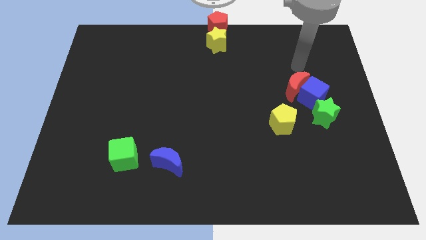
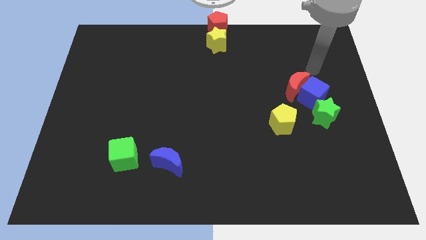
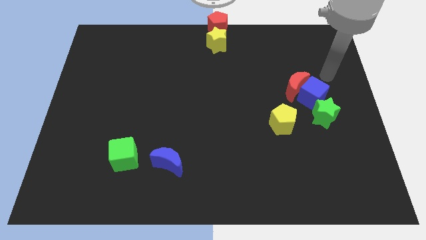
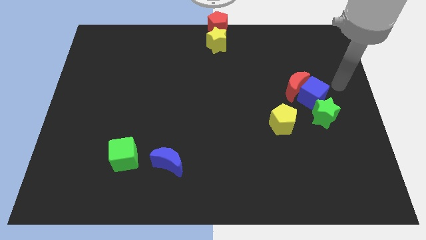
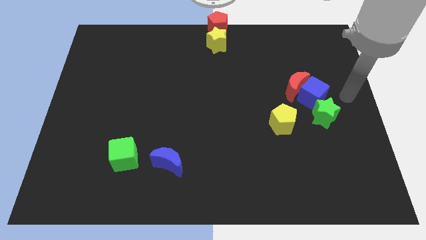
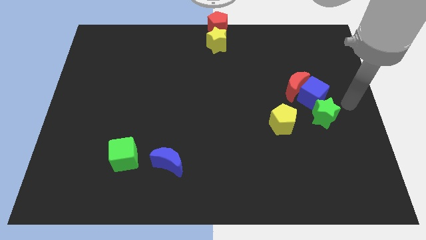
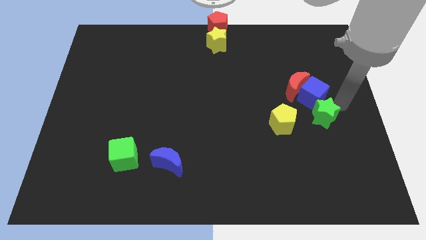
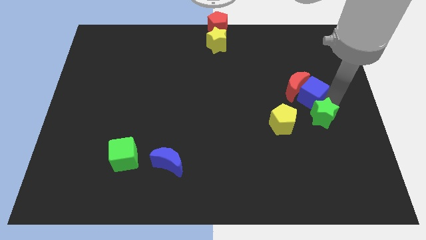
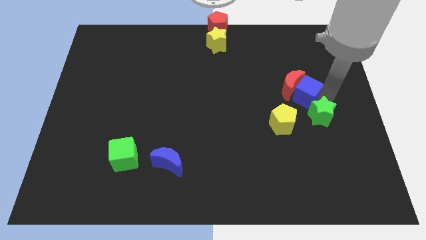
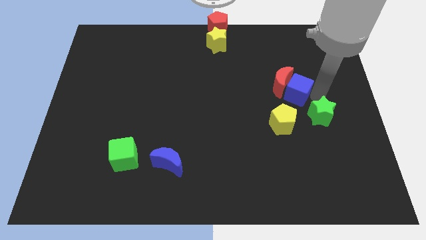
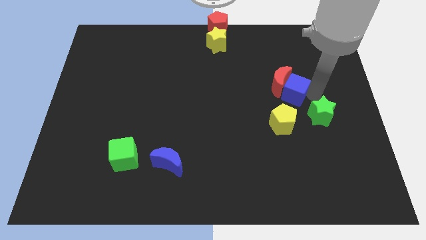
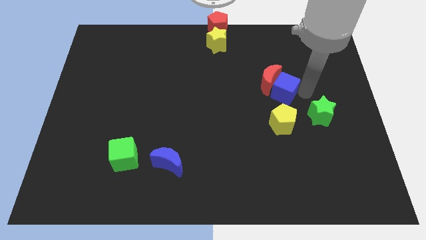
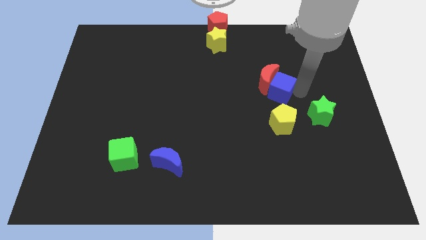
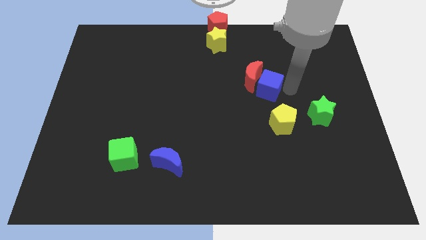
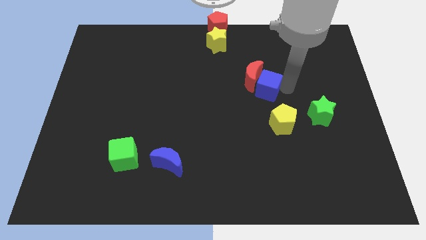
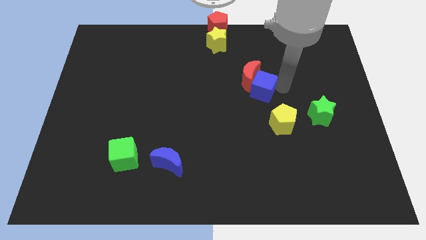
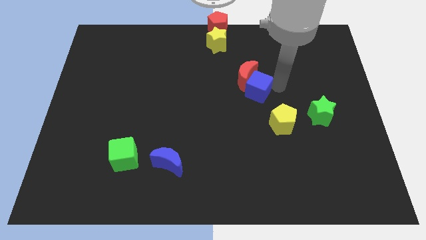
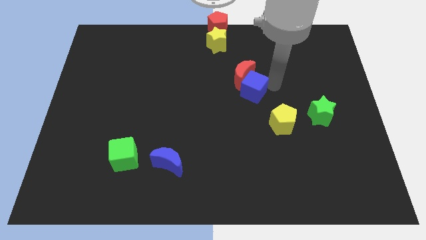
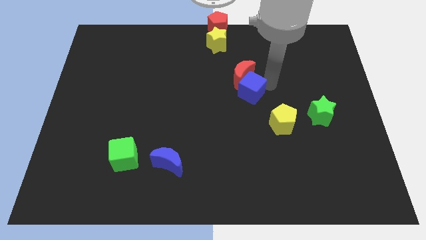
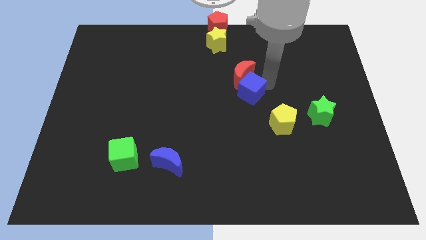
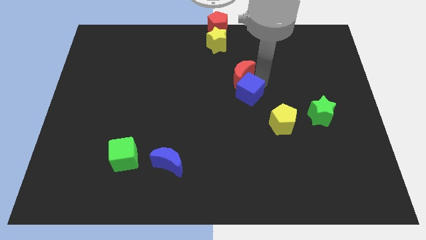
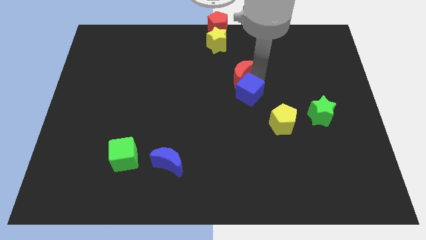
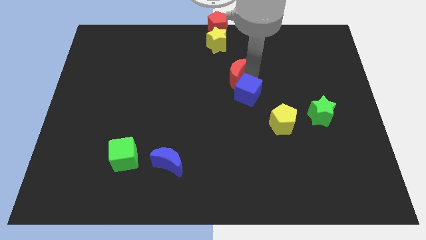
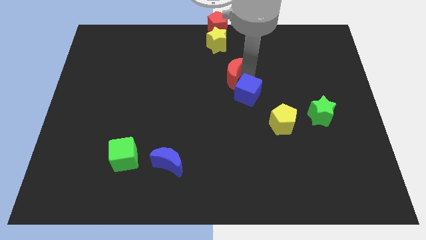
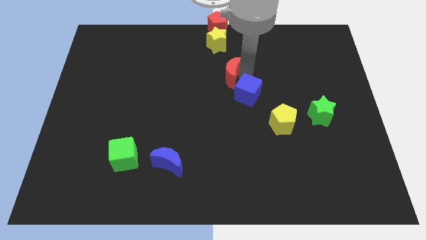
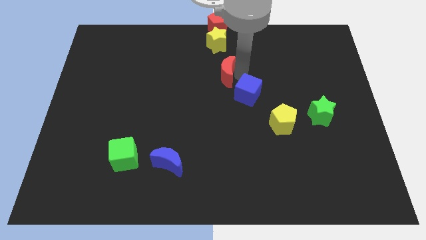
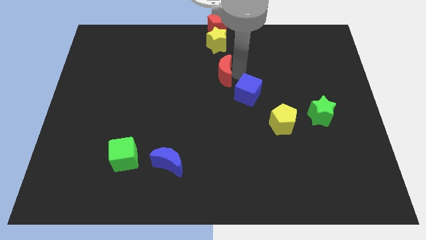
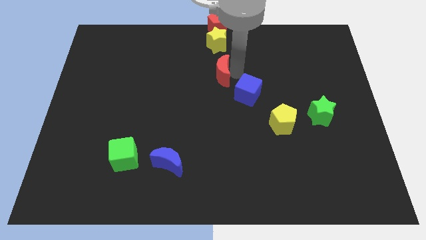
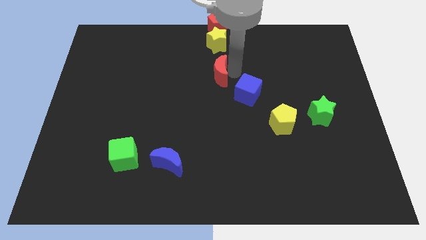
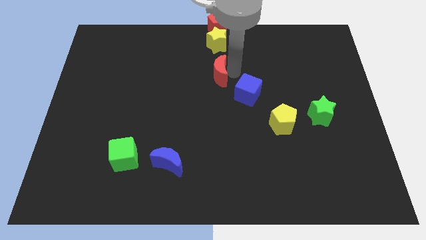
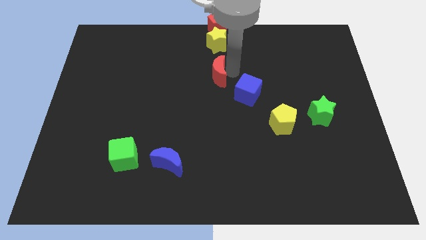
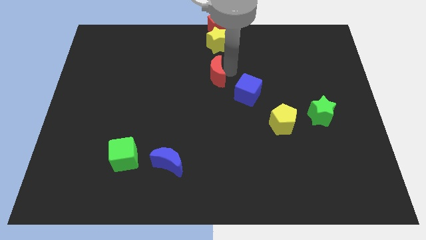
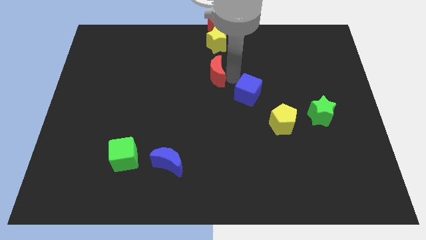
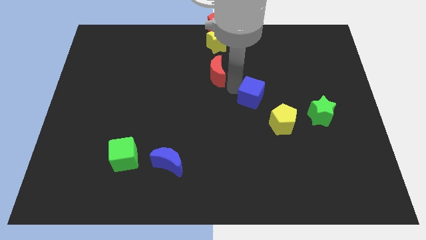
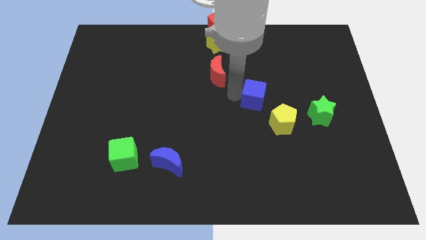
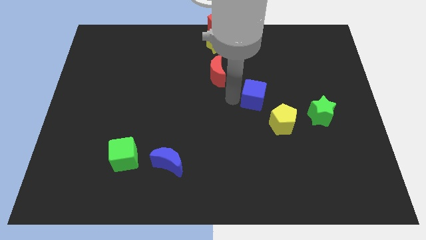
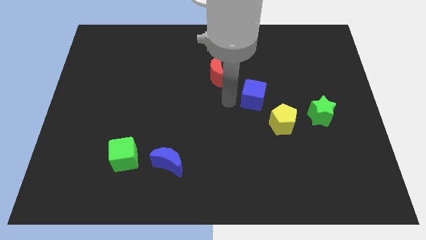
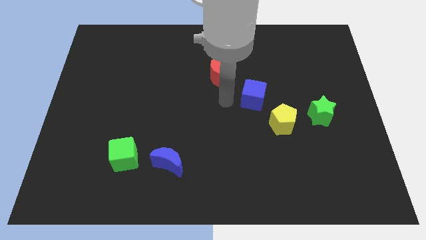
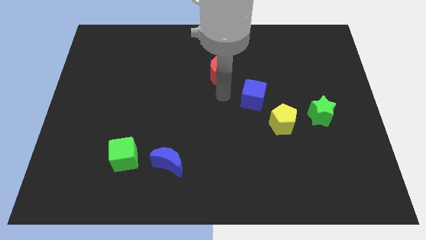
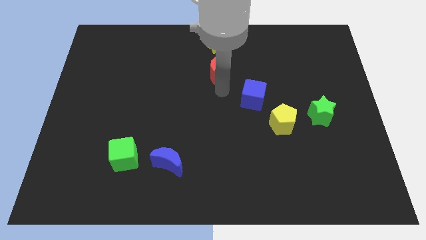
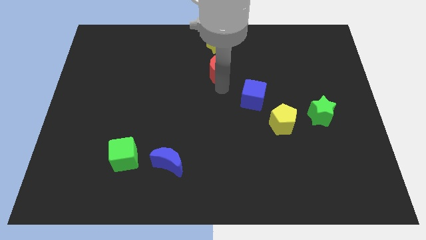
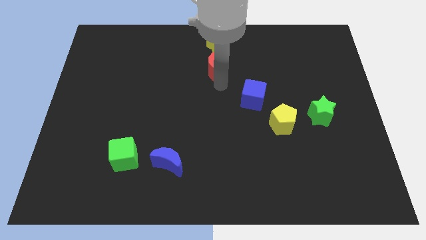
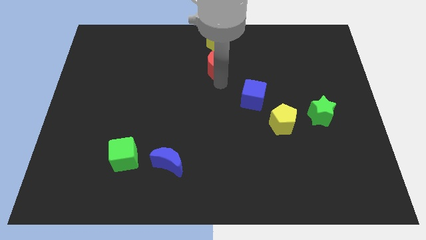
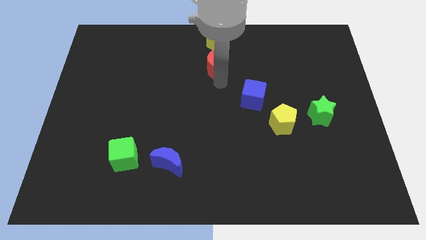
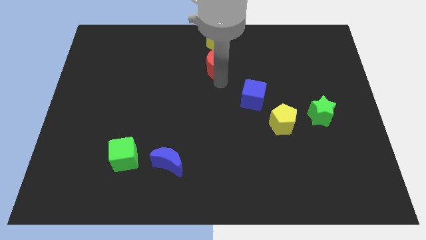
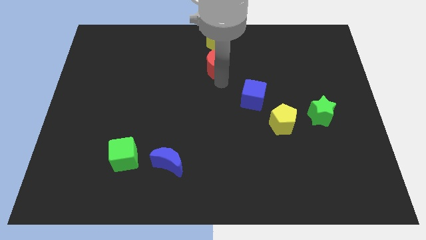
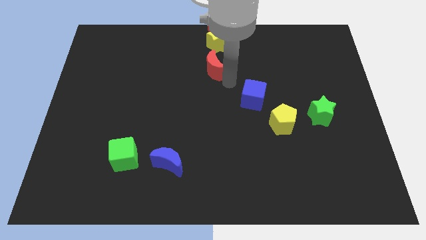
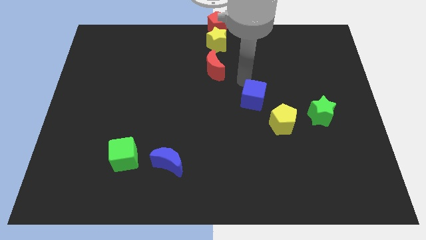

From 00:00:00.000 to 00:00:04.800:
move the red crescent below to the yellow star

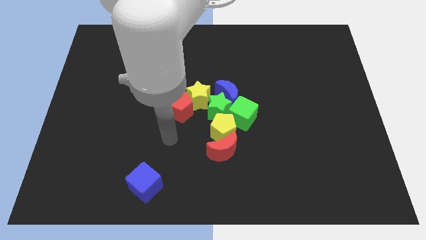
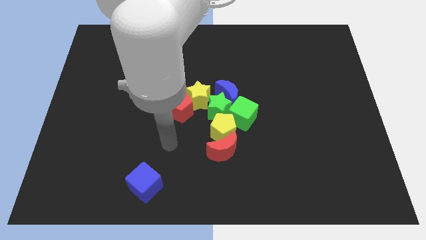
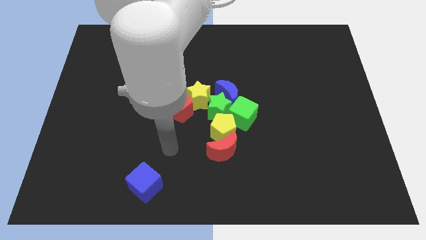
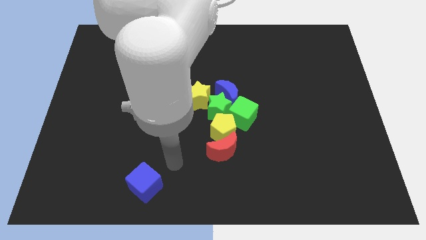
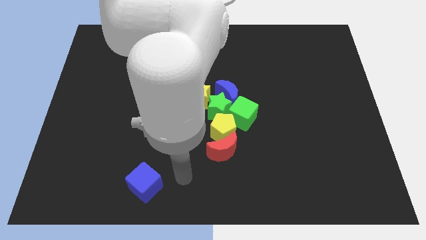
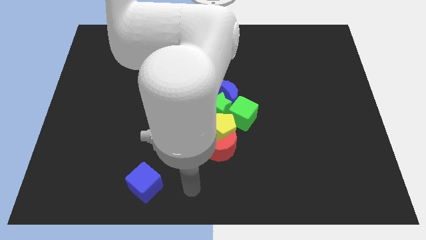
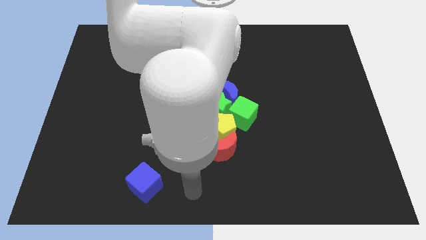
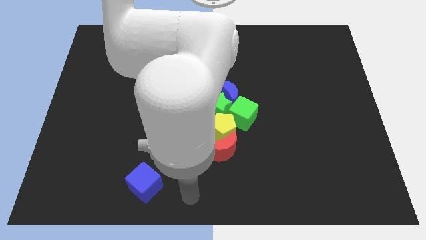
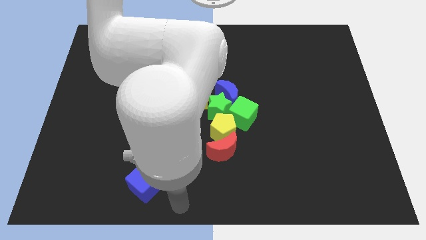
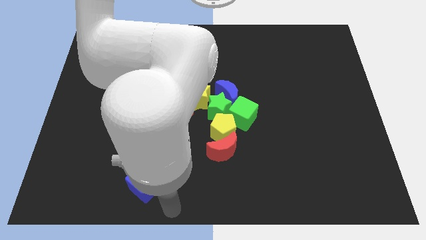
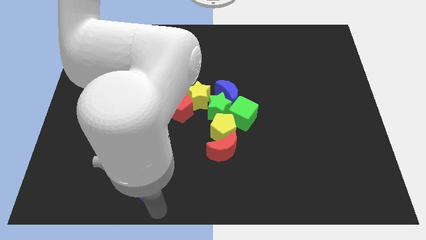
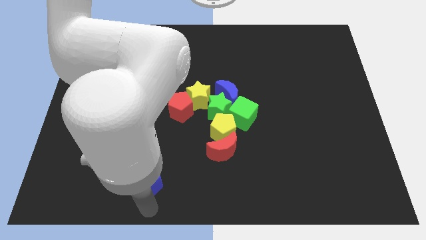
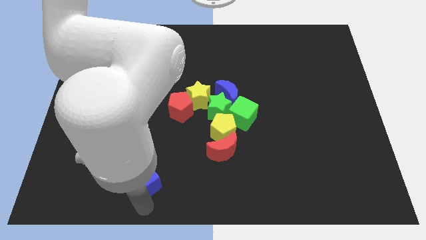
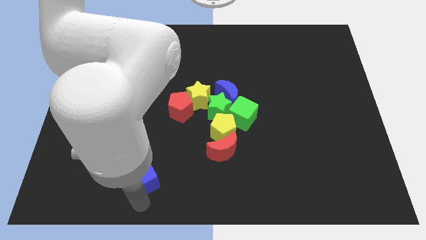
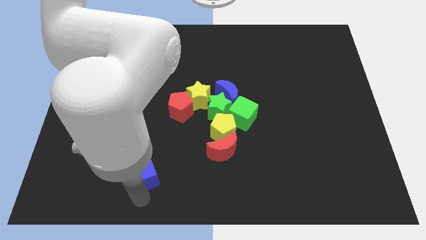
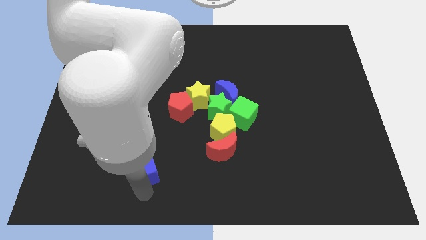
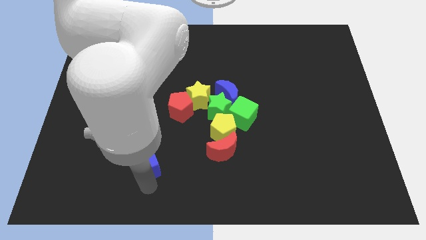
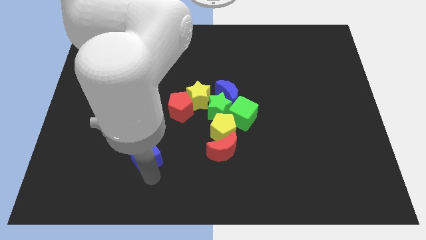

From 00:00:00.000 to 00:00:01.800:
move the blue cube towards the top side

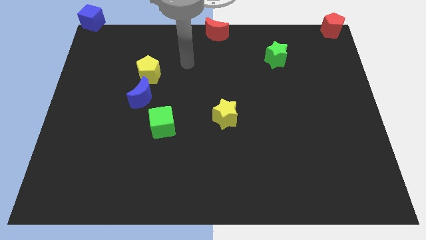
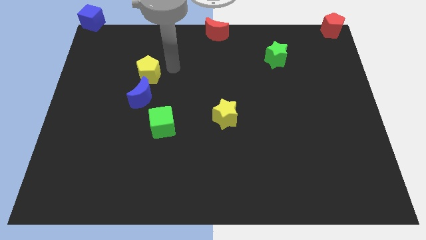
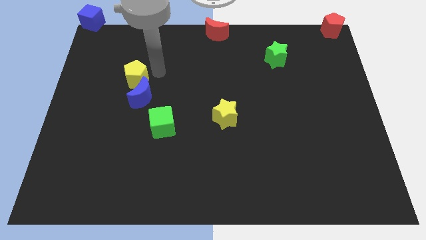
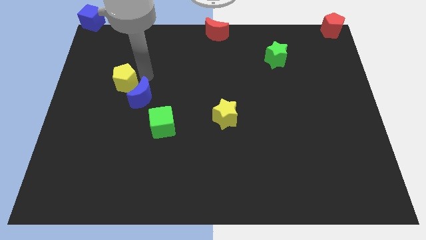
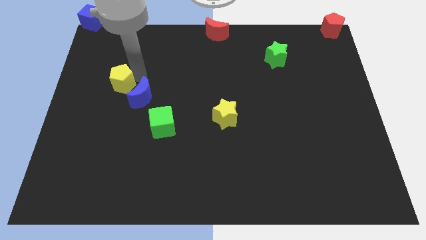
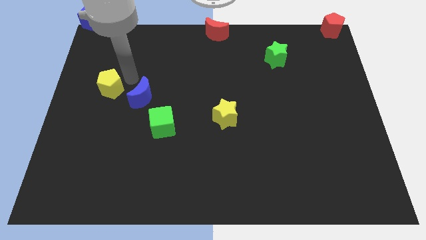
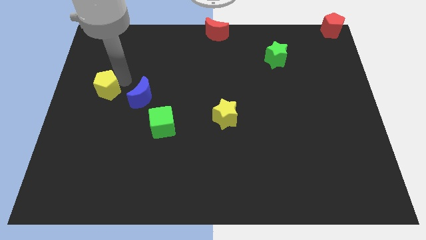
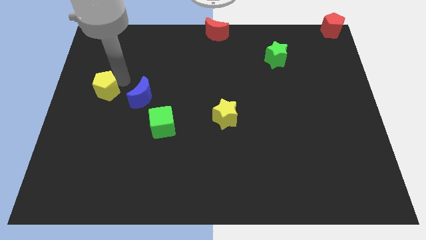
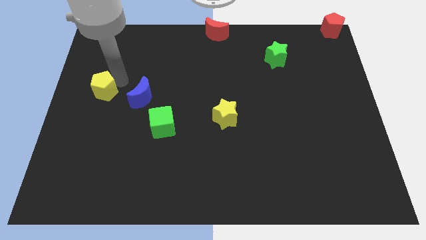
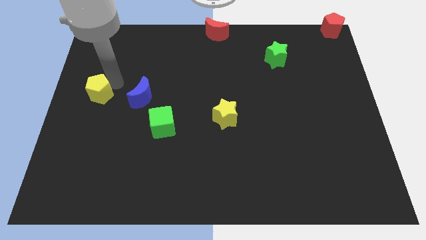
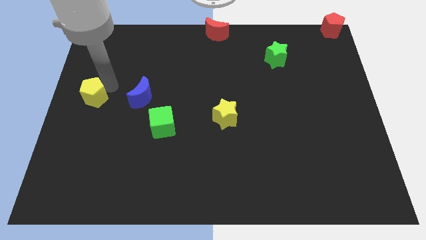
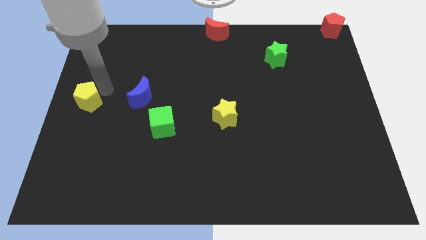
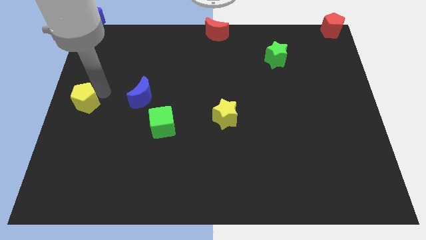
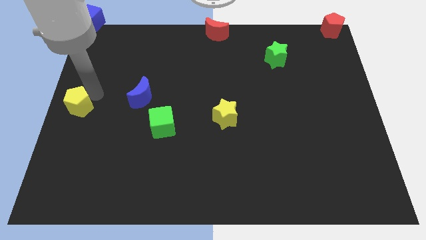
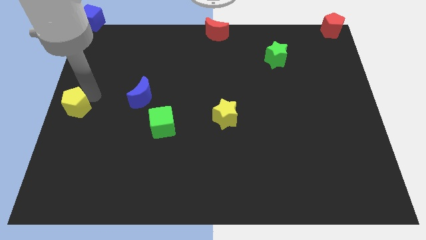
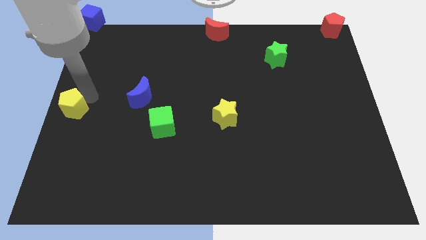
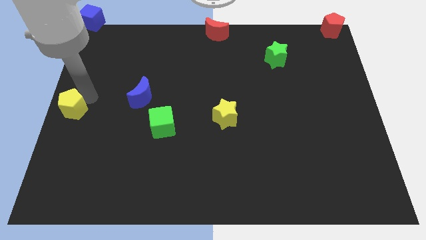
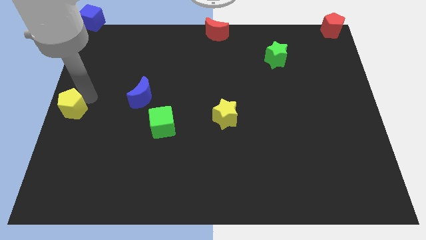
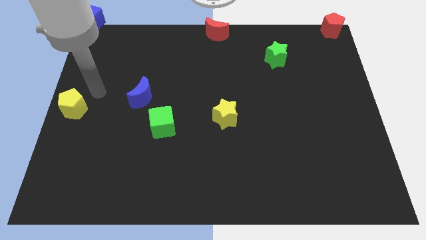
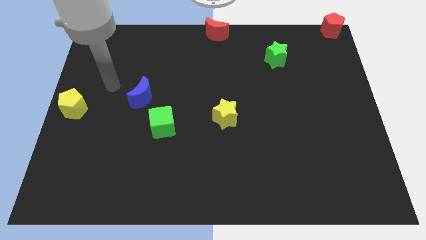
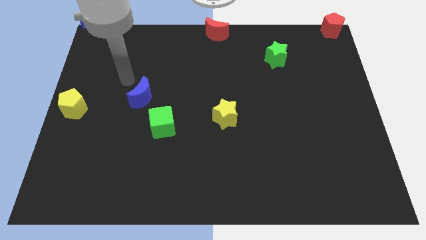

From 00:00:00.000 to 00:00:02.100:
slide yellow pentagon to the center left of the board

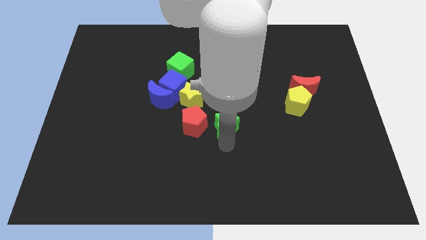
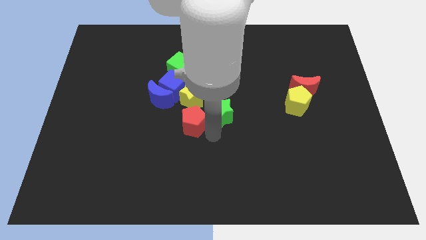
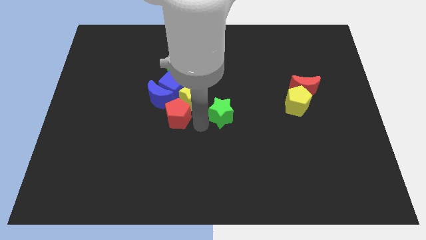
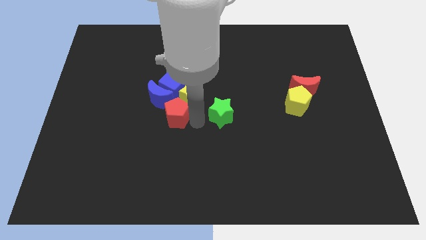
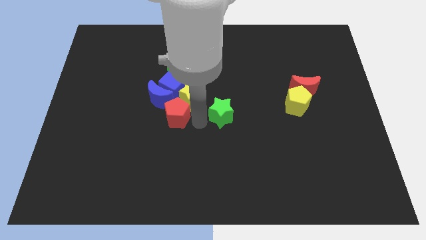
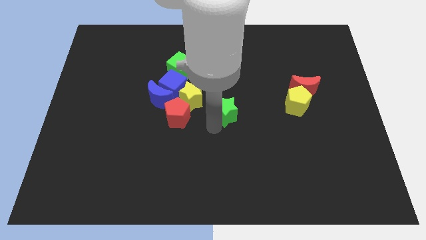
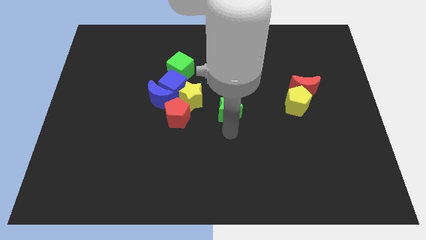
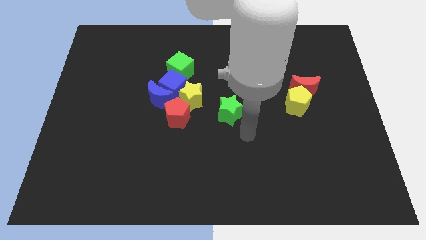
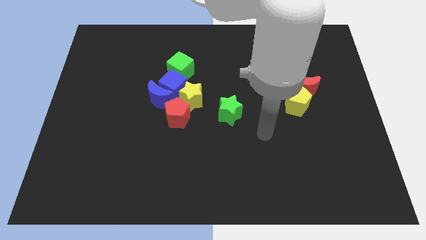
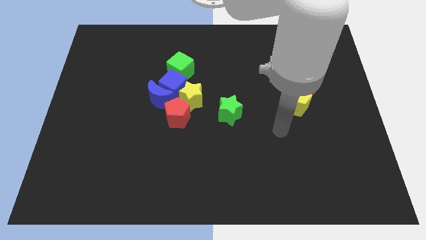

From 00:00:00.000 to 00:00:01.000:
separate the green star and red pentagon
